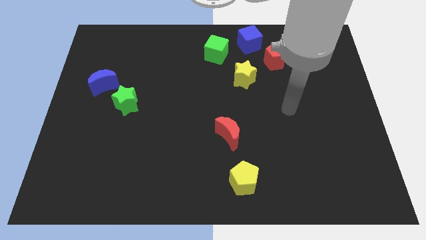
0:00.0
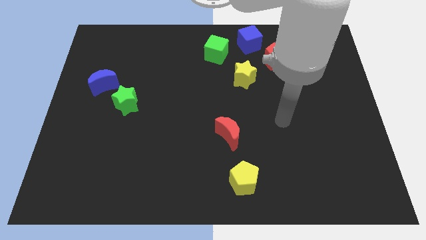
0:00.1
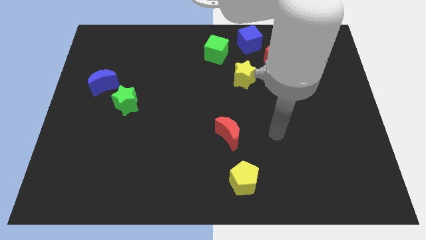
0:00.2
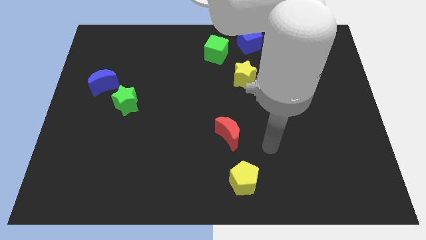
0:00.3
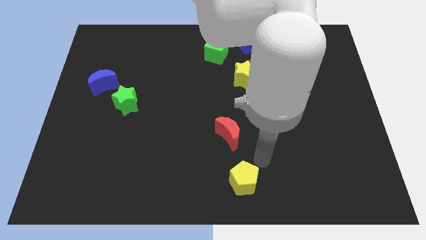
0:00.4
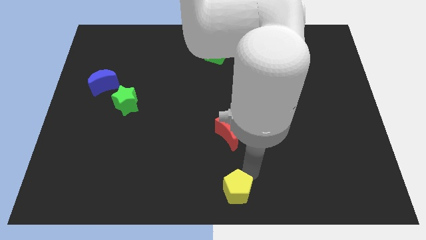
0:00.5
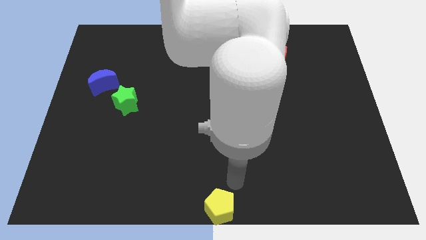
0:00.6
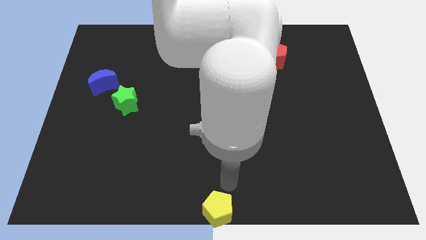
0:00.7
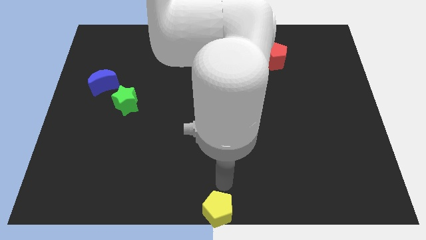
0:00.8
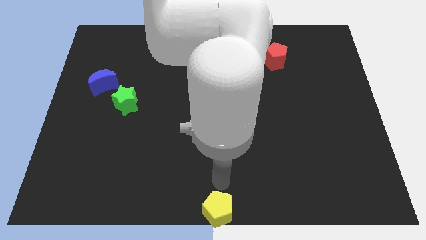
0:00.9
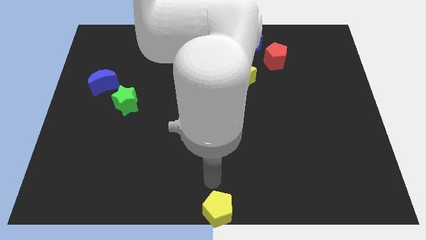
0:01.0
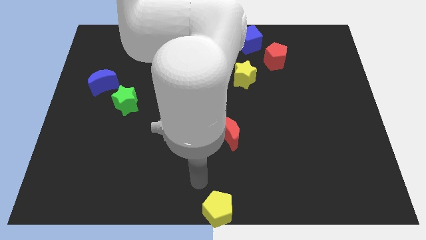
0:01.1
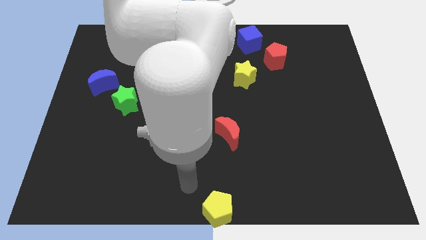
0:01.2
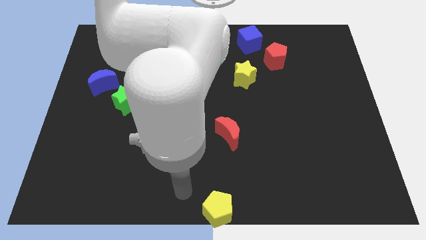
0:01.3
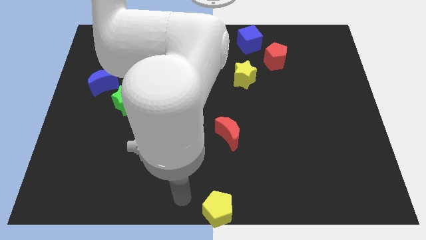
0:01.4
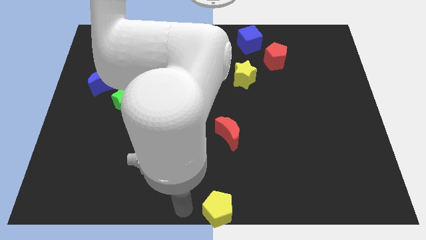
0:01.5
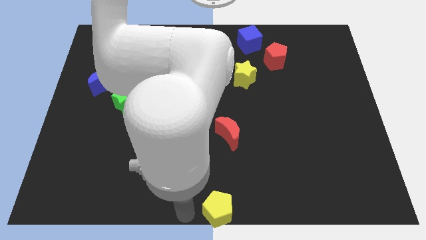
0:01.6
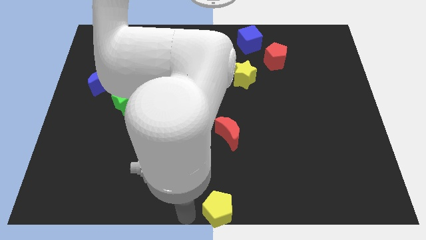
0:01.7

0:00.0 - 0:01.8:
move the yellow pentagon to the bottom center

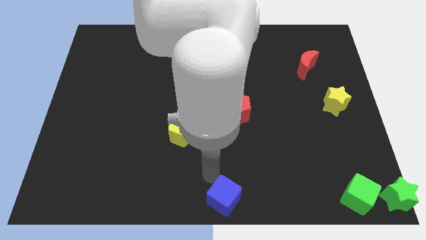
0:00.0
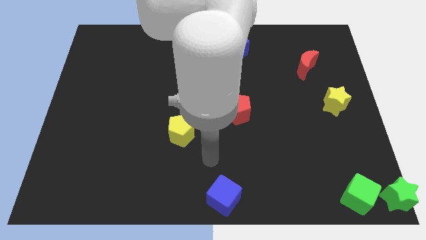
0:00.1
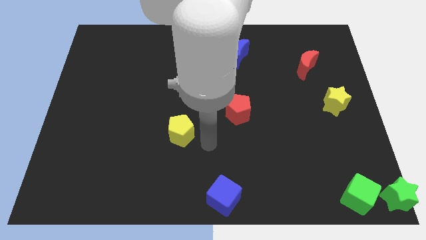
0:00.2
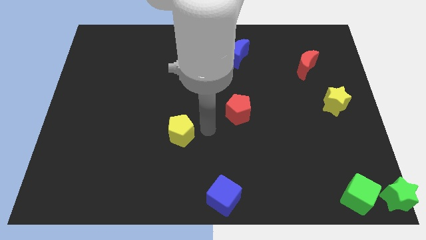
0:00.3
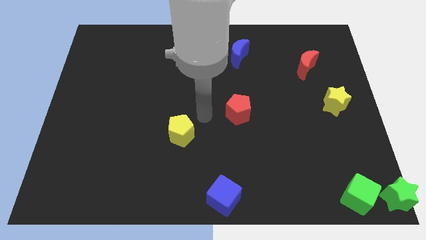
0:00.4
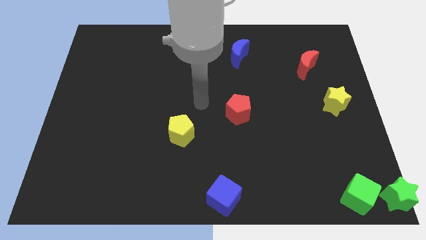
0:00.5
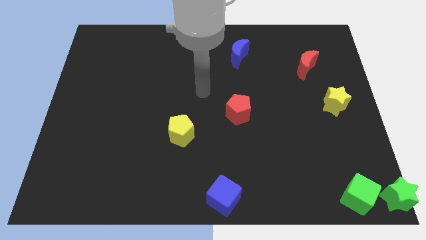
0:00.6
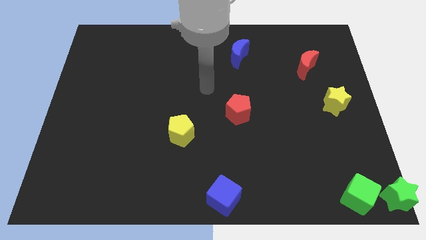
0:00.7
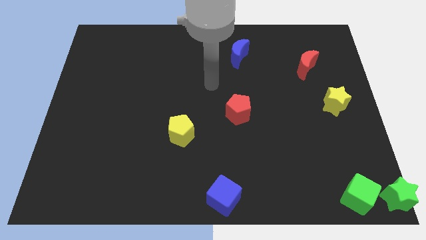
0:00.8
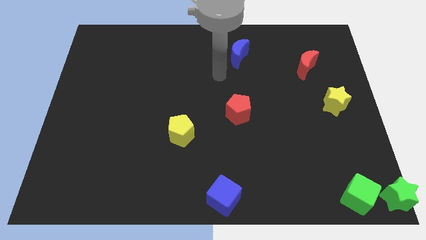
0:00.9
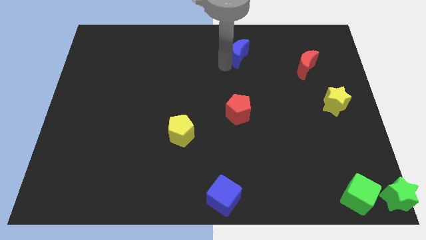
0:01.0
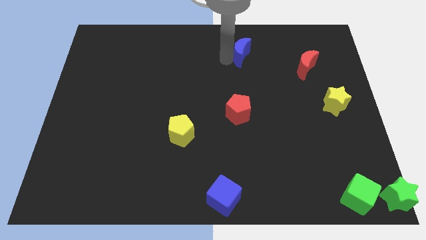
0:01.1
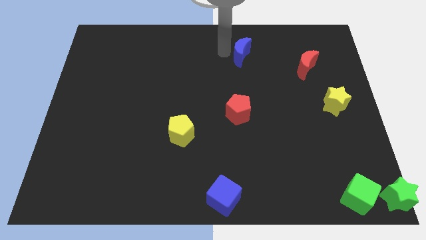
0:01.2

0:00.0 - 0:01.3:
tap the blue moon

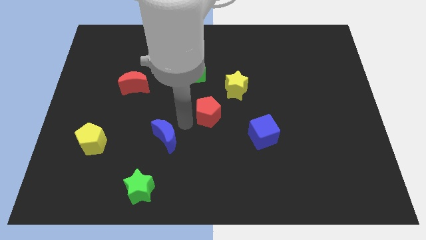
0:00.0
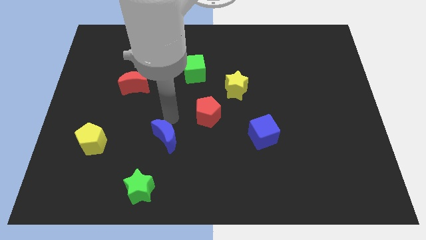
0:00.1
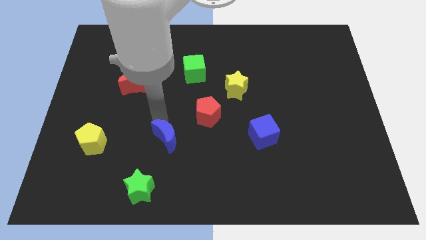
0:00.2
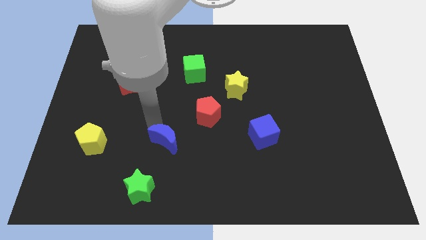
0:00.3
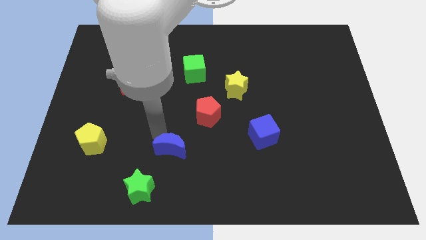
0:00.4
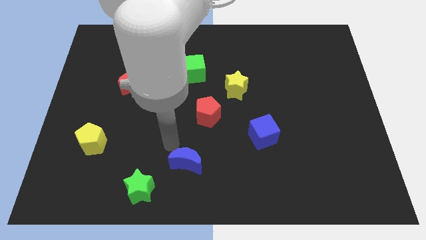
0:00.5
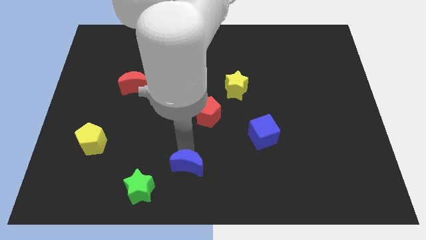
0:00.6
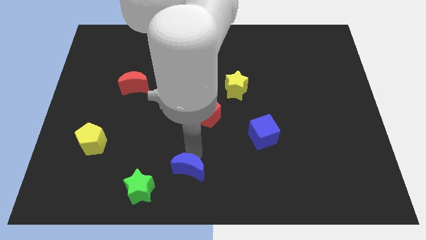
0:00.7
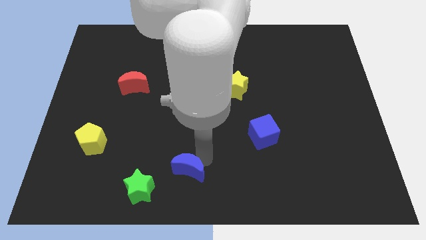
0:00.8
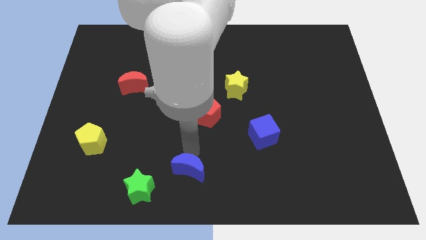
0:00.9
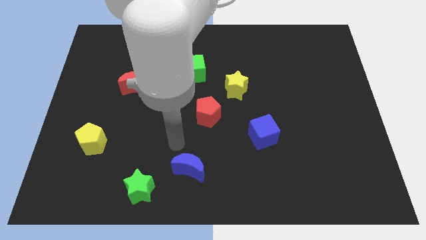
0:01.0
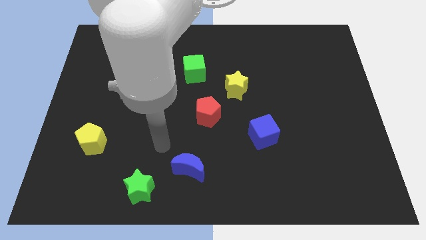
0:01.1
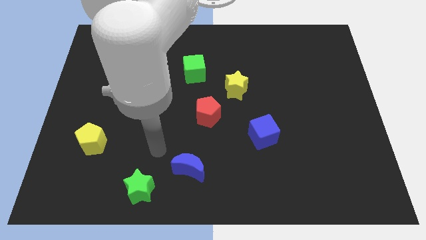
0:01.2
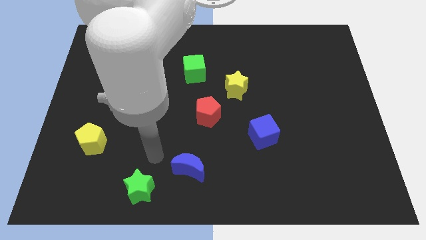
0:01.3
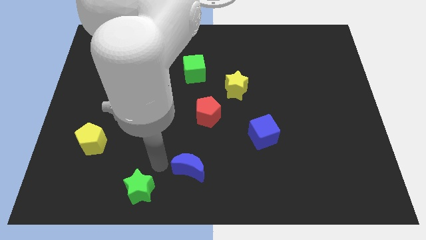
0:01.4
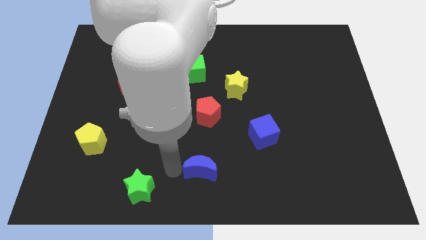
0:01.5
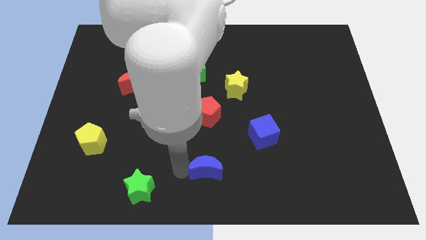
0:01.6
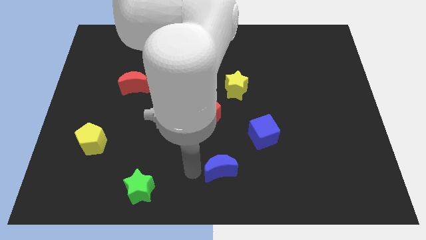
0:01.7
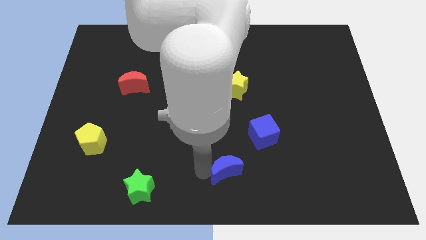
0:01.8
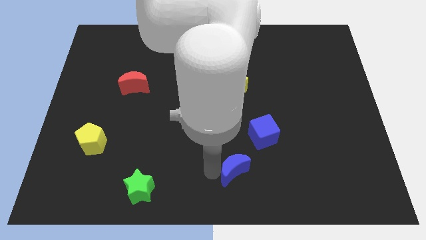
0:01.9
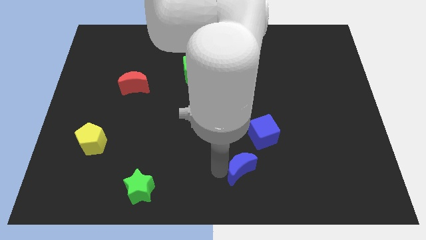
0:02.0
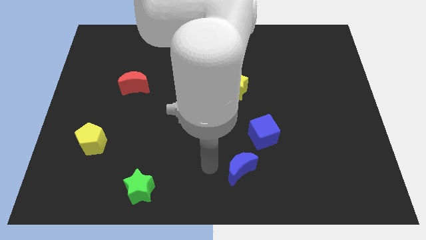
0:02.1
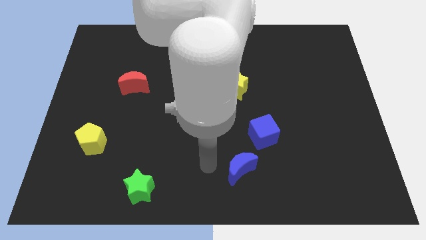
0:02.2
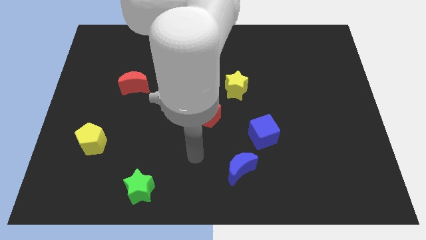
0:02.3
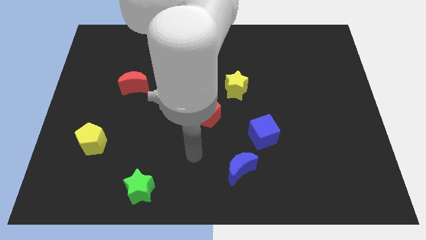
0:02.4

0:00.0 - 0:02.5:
move the blue moon diagonally to the left of the blue cube

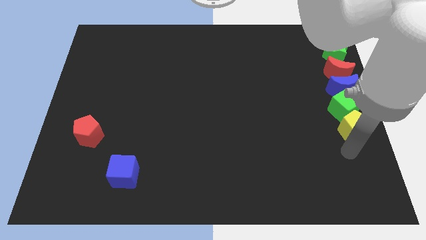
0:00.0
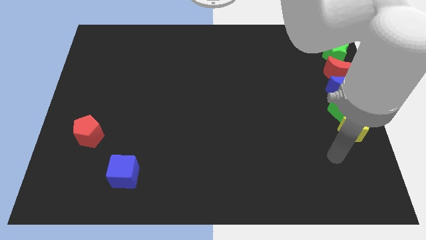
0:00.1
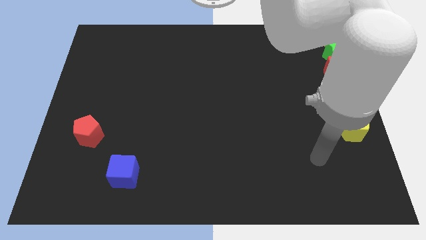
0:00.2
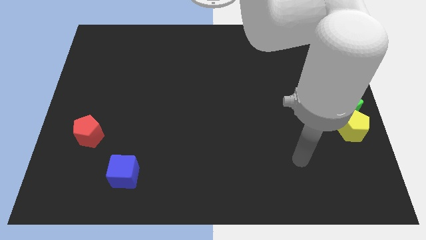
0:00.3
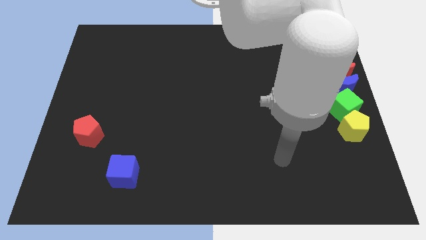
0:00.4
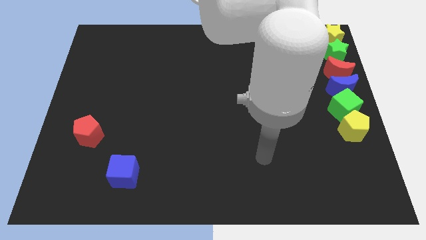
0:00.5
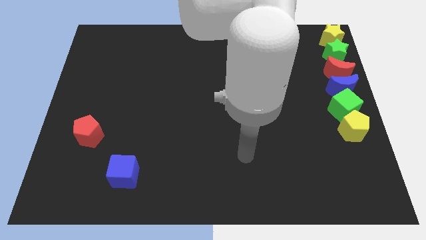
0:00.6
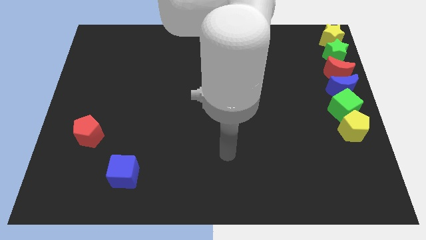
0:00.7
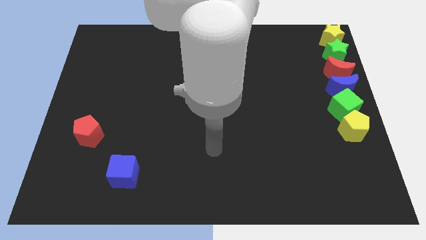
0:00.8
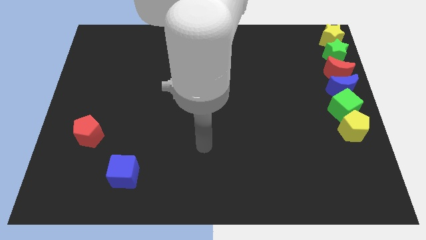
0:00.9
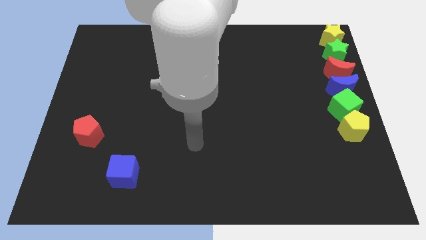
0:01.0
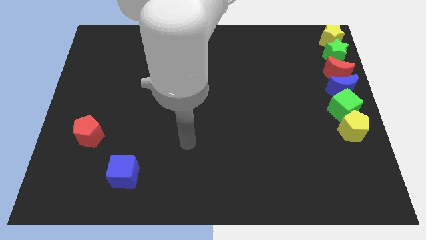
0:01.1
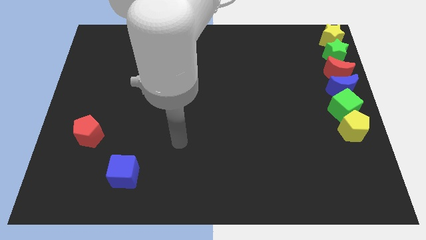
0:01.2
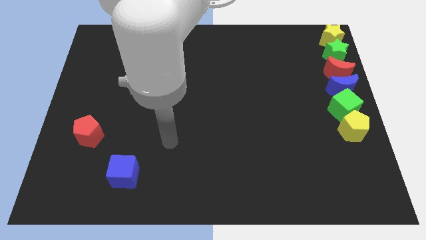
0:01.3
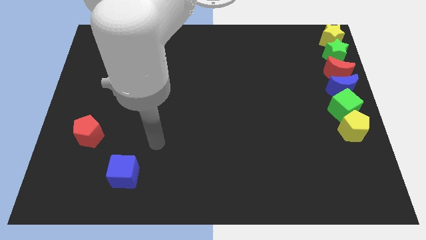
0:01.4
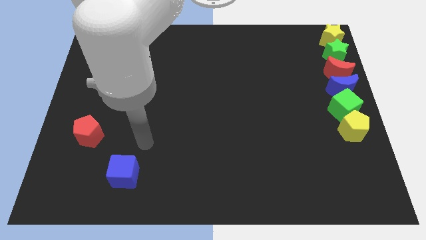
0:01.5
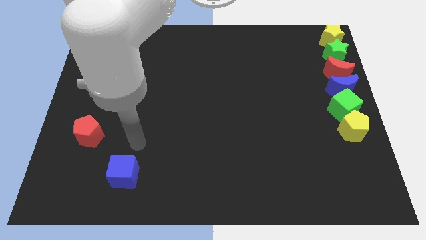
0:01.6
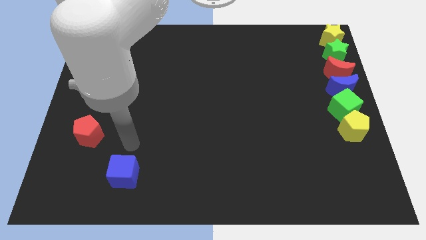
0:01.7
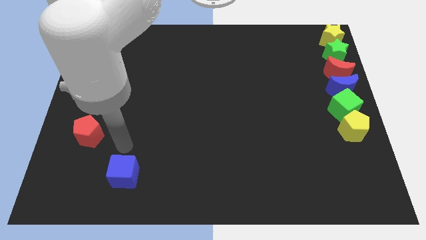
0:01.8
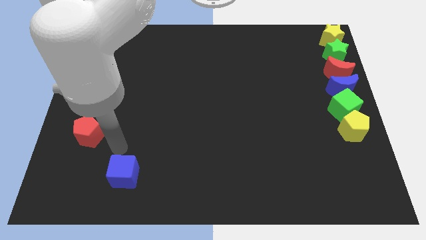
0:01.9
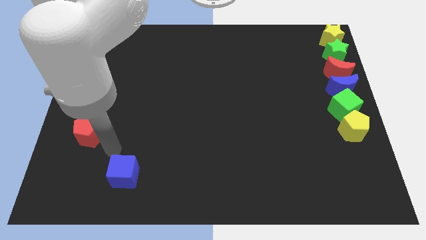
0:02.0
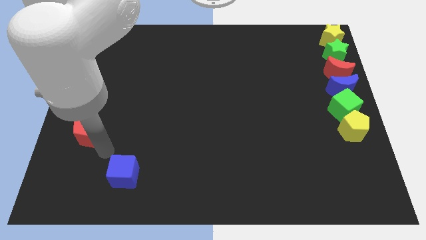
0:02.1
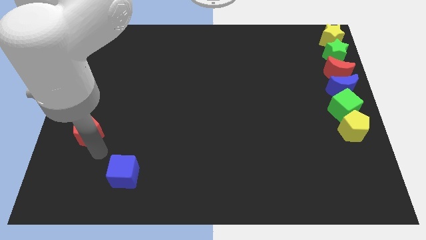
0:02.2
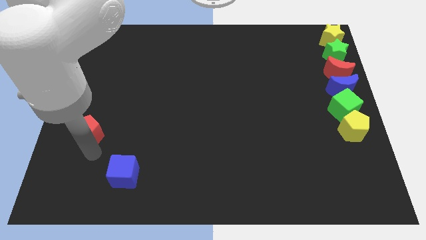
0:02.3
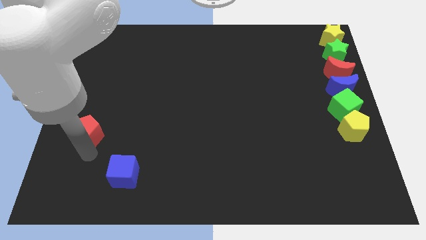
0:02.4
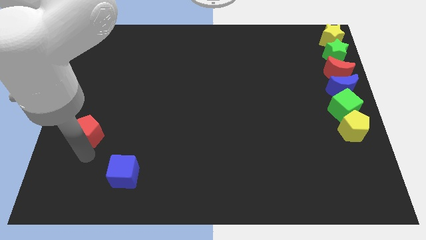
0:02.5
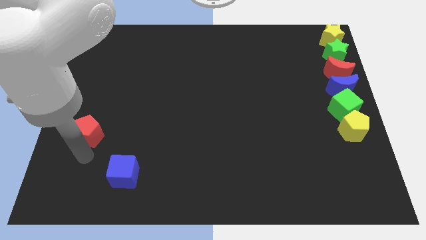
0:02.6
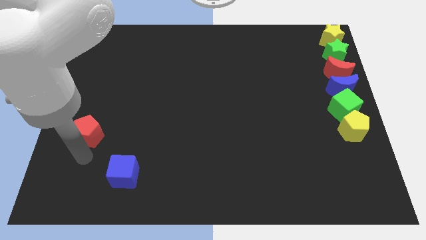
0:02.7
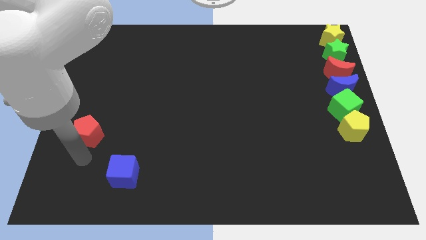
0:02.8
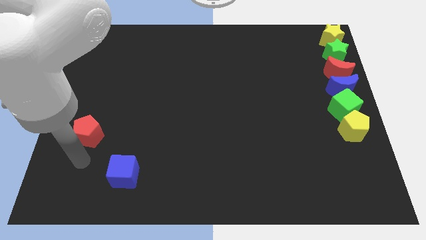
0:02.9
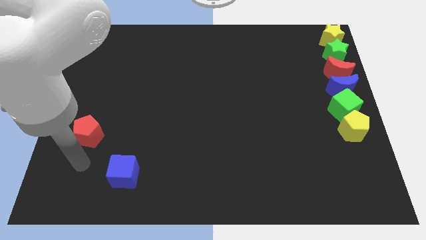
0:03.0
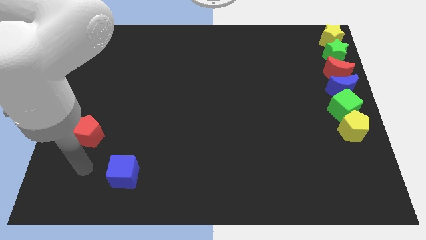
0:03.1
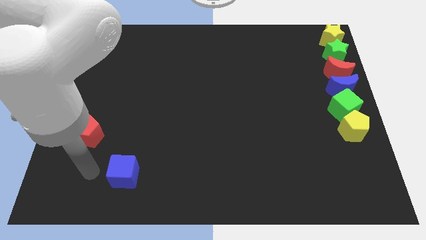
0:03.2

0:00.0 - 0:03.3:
move the arm towards the blue cube

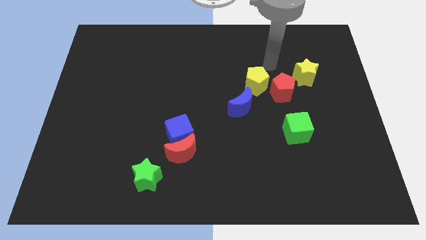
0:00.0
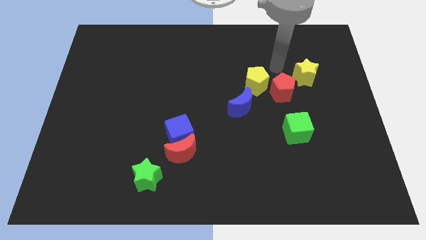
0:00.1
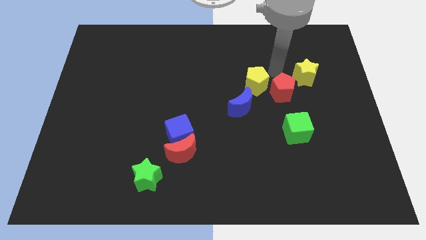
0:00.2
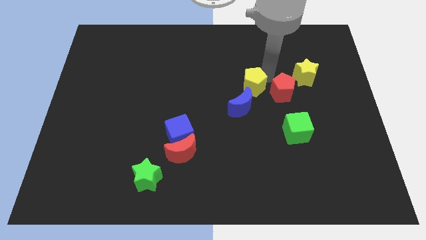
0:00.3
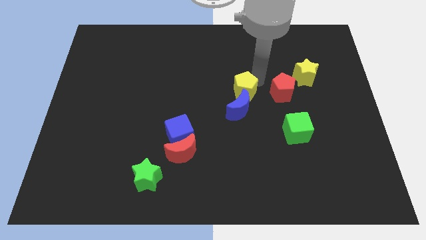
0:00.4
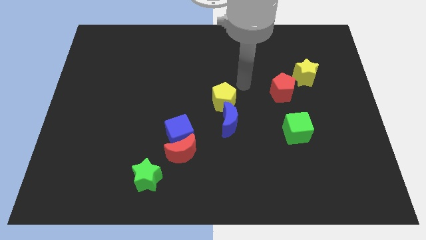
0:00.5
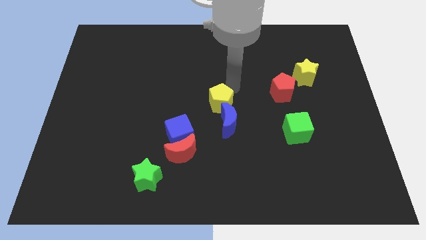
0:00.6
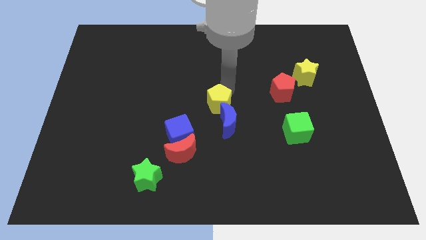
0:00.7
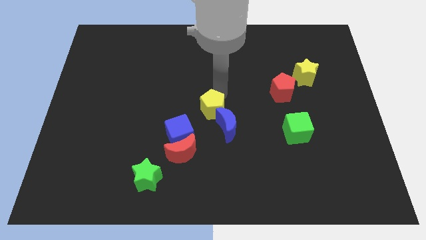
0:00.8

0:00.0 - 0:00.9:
push yellow pentagon to the center of the board
